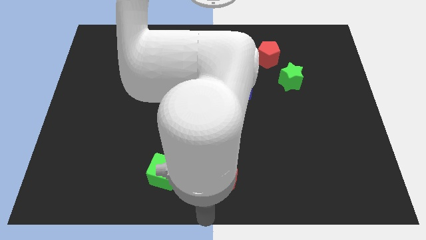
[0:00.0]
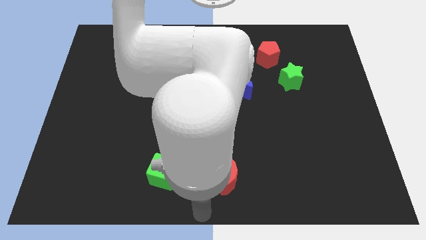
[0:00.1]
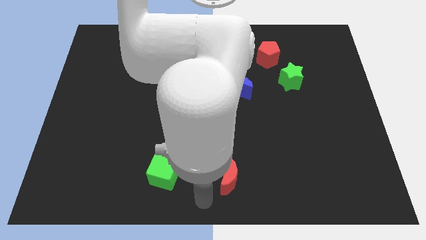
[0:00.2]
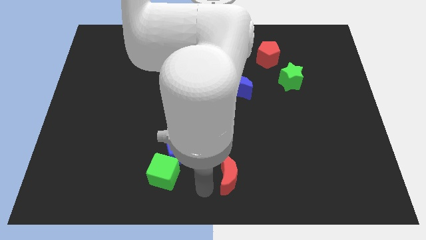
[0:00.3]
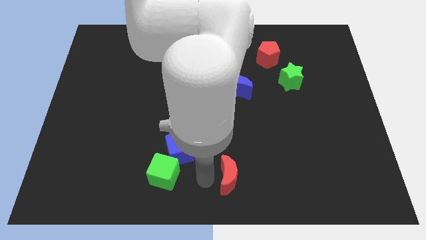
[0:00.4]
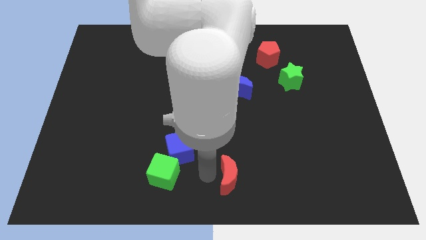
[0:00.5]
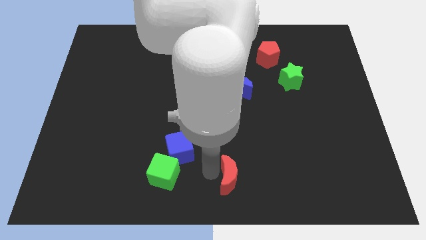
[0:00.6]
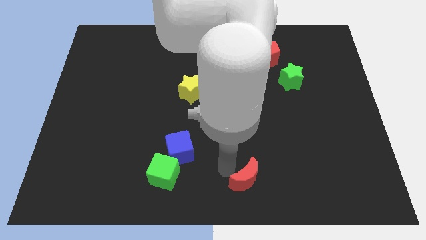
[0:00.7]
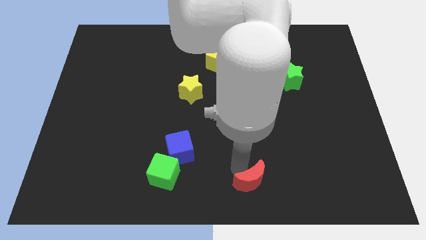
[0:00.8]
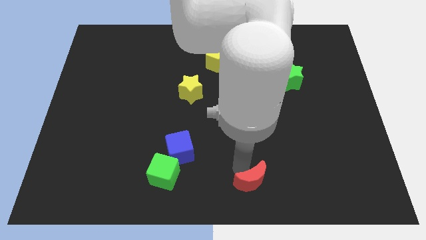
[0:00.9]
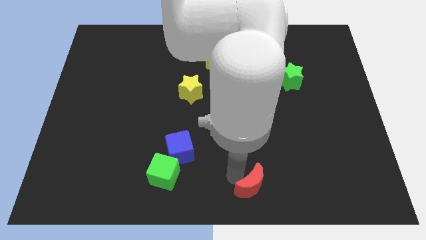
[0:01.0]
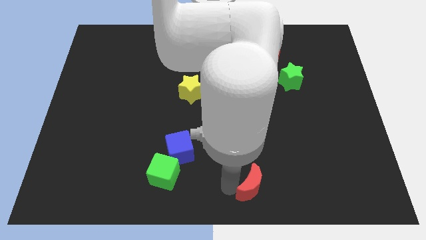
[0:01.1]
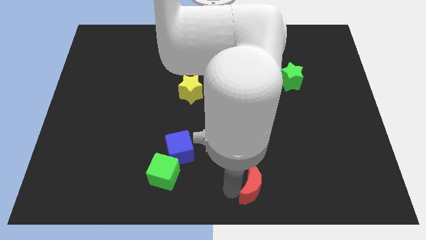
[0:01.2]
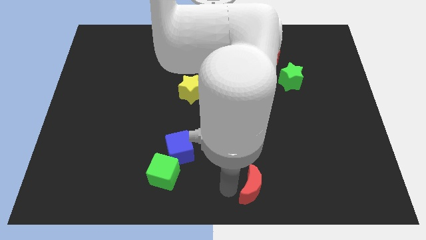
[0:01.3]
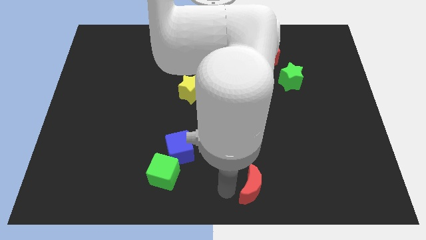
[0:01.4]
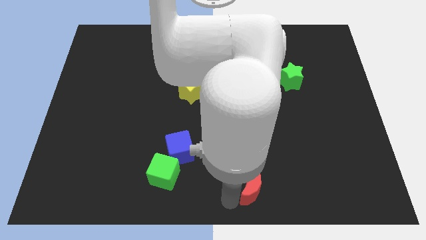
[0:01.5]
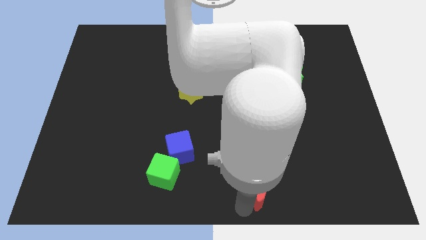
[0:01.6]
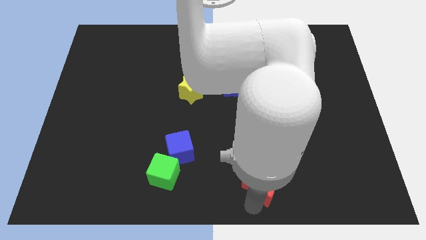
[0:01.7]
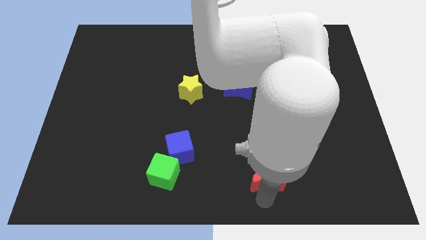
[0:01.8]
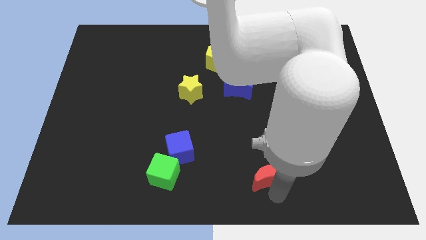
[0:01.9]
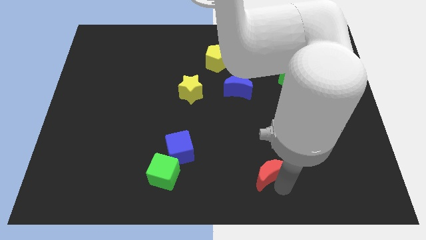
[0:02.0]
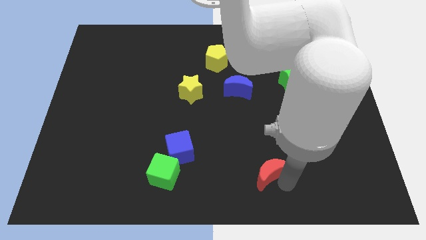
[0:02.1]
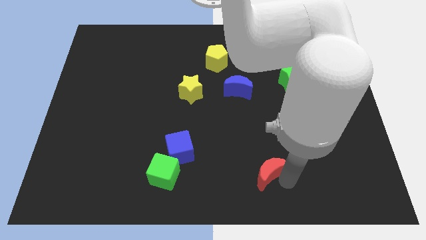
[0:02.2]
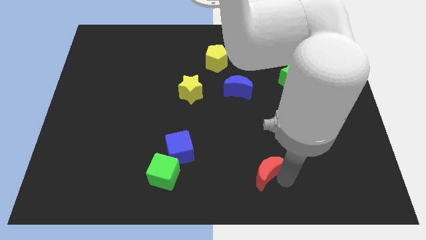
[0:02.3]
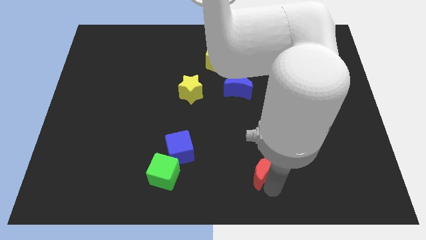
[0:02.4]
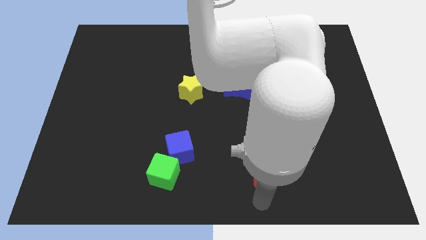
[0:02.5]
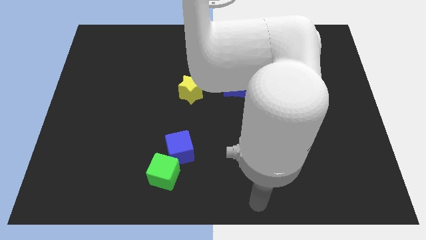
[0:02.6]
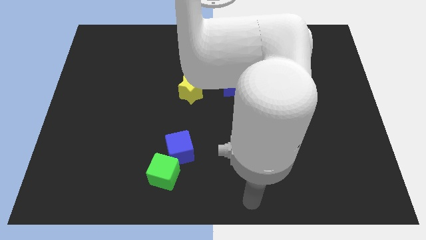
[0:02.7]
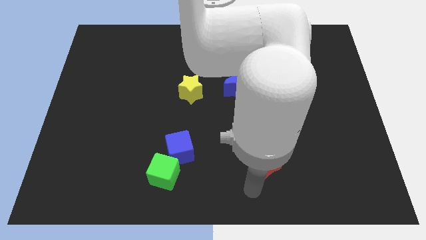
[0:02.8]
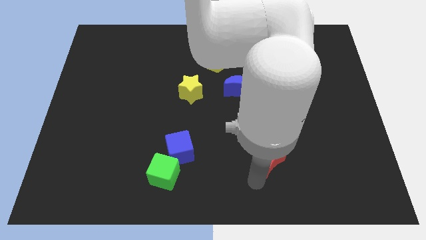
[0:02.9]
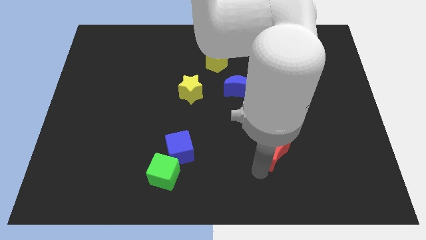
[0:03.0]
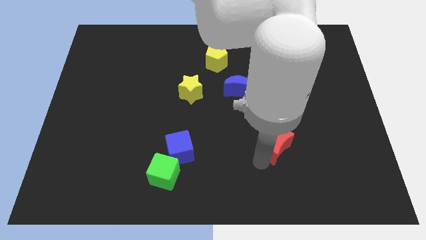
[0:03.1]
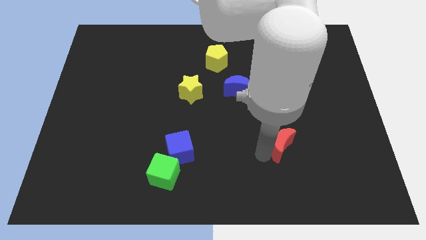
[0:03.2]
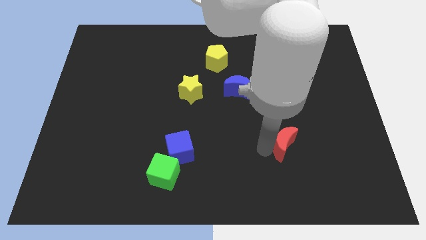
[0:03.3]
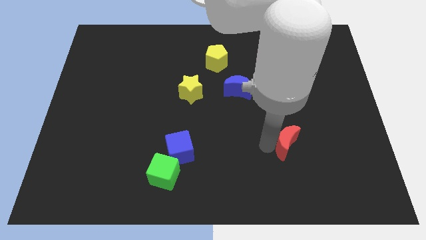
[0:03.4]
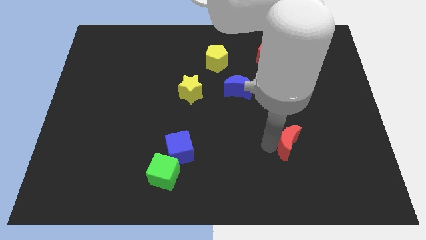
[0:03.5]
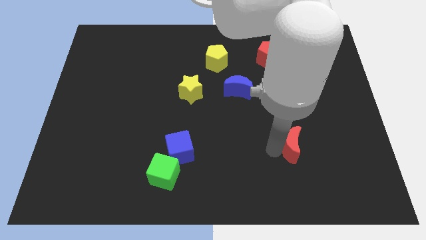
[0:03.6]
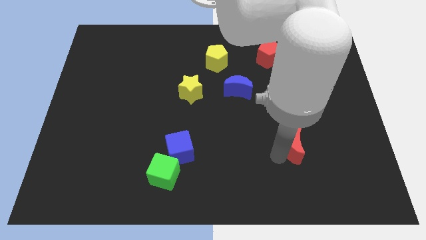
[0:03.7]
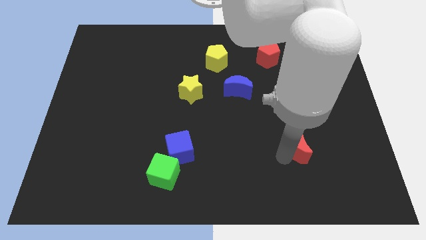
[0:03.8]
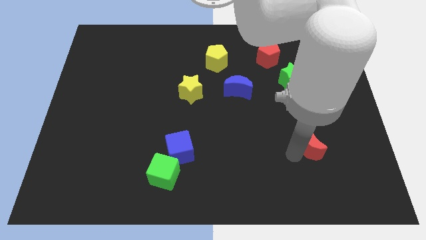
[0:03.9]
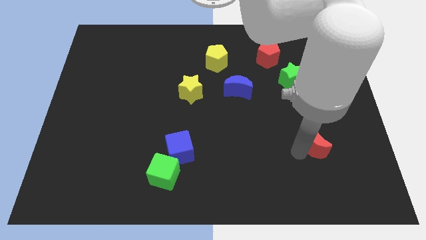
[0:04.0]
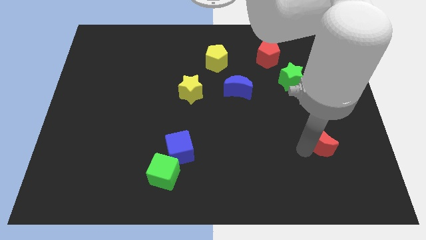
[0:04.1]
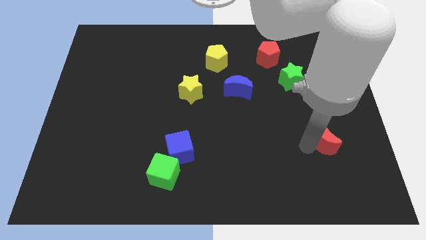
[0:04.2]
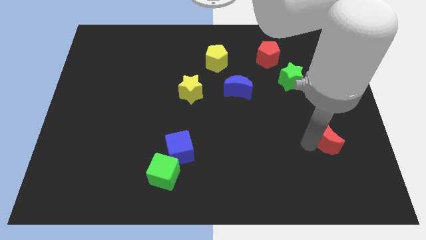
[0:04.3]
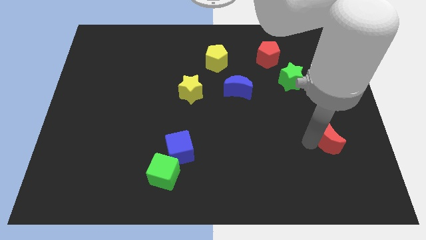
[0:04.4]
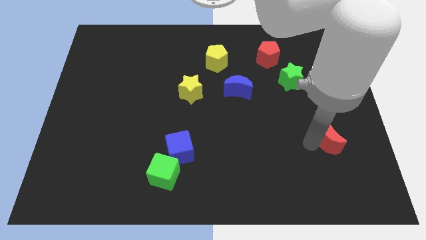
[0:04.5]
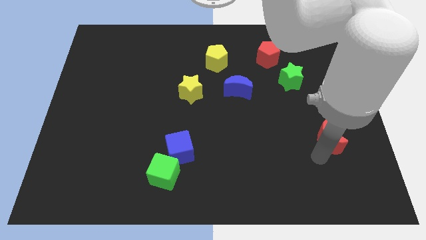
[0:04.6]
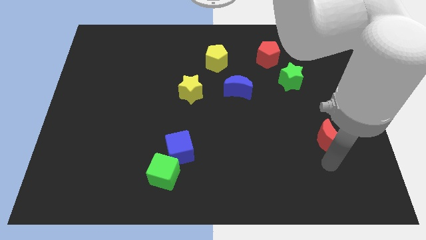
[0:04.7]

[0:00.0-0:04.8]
move the red crescent to the right of blue cube

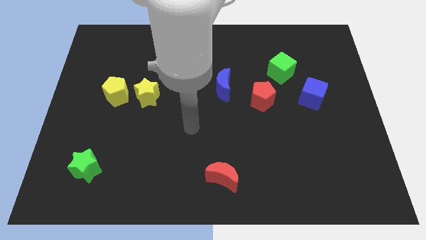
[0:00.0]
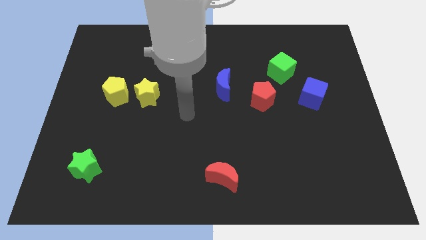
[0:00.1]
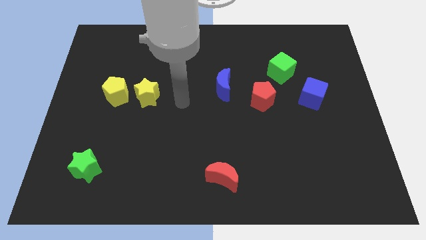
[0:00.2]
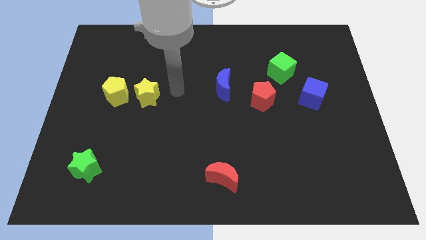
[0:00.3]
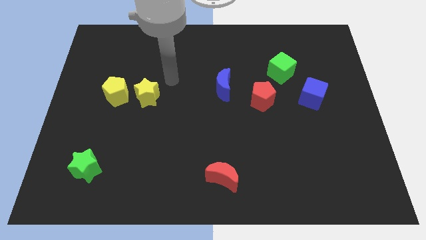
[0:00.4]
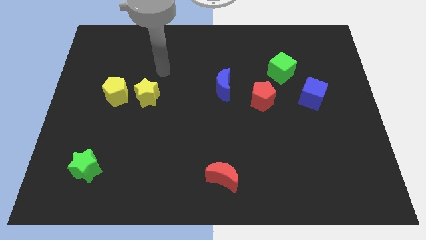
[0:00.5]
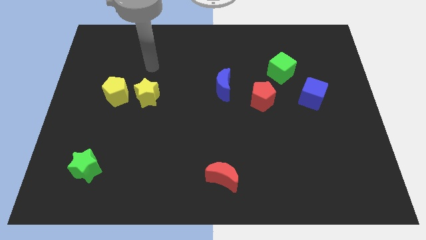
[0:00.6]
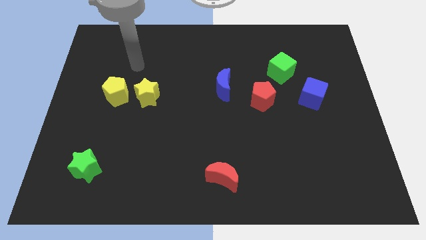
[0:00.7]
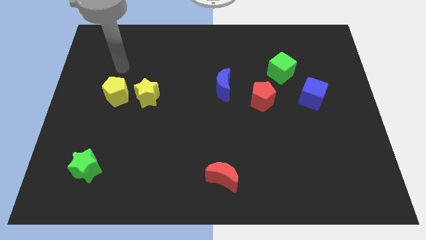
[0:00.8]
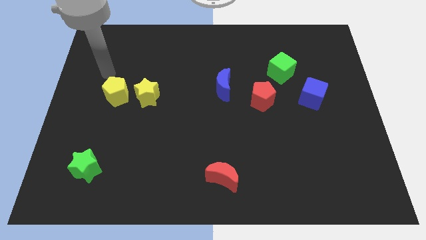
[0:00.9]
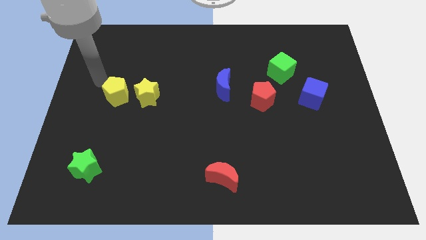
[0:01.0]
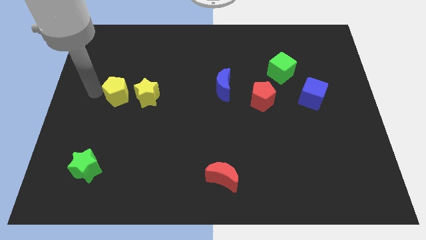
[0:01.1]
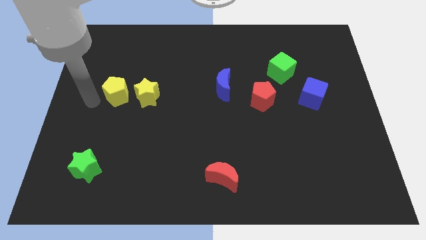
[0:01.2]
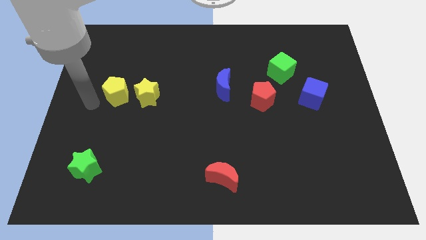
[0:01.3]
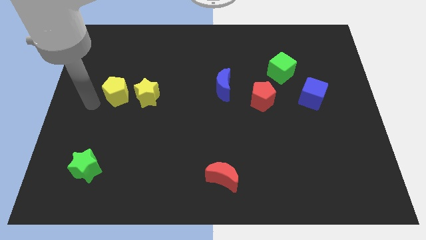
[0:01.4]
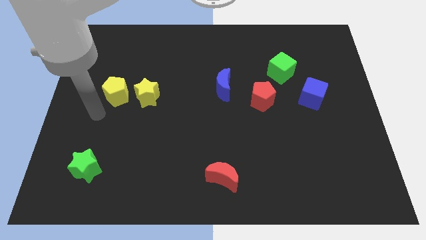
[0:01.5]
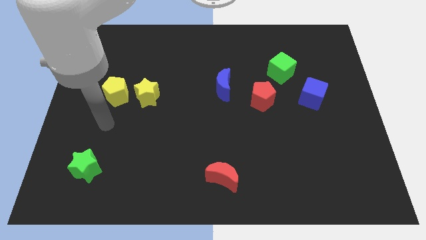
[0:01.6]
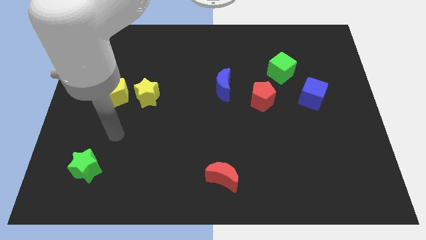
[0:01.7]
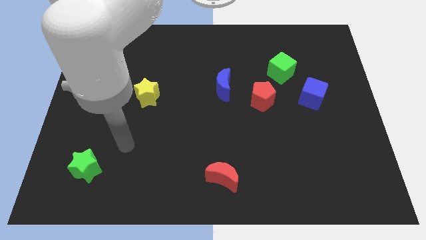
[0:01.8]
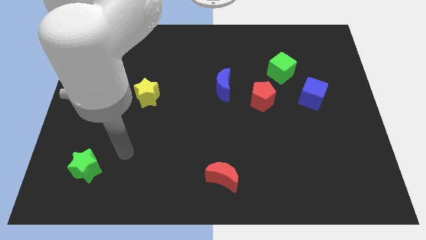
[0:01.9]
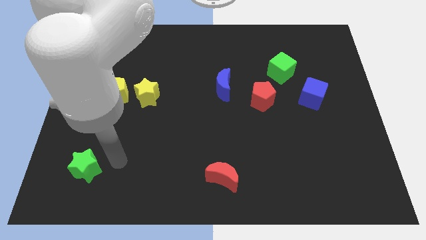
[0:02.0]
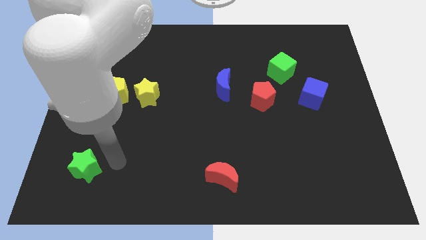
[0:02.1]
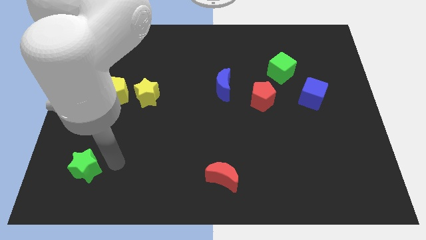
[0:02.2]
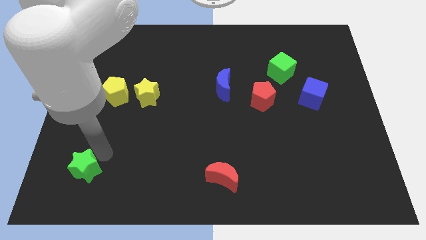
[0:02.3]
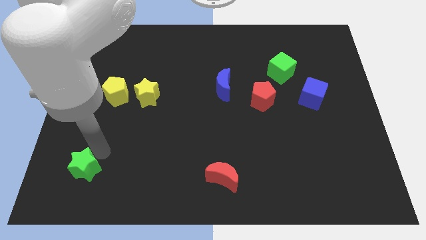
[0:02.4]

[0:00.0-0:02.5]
move your arm closer to the green star

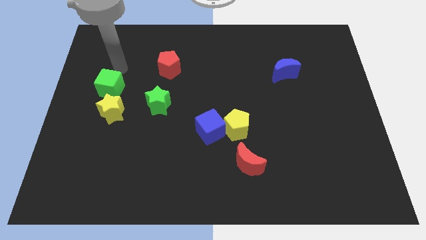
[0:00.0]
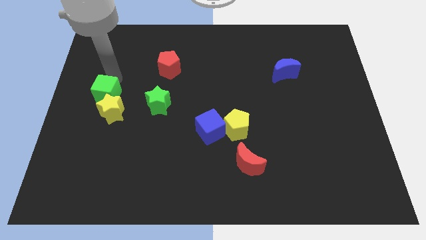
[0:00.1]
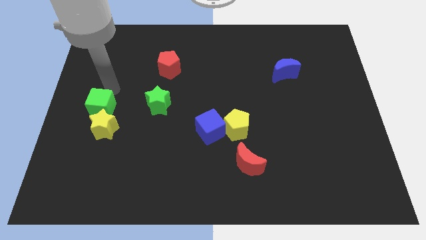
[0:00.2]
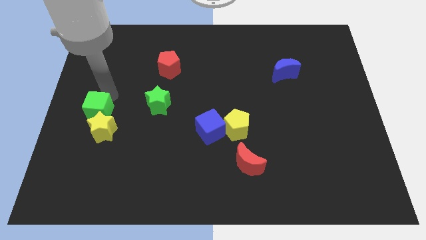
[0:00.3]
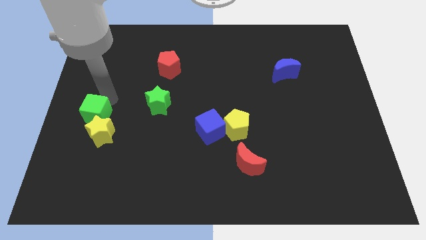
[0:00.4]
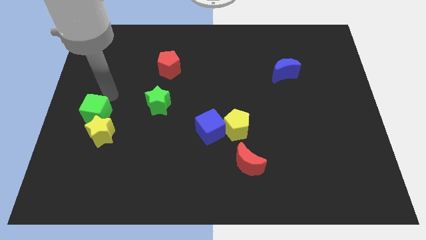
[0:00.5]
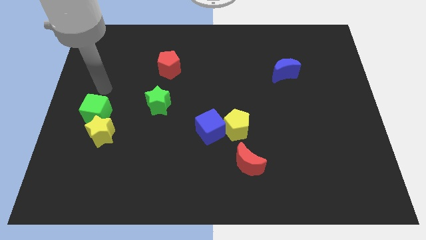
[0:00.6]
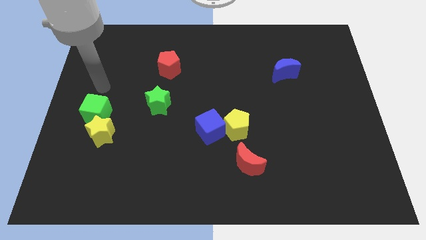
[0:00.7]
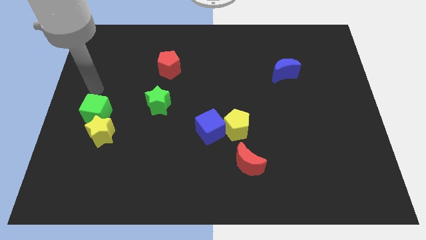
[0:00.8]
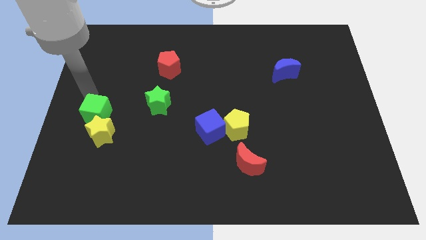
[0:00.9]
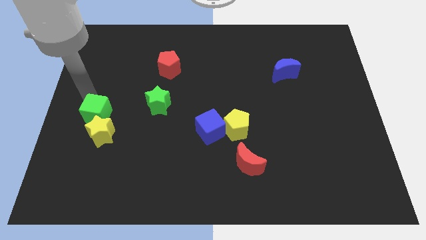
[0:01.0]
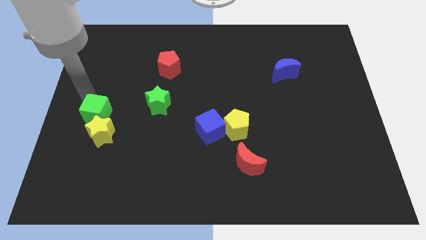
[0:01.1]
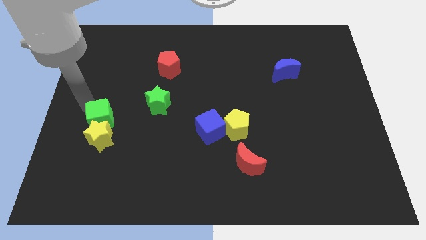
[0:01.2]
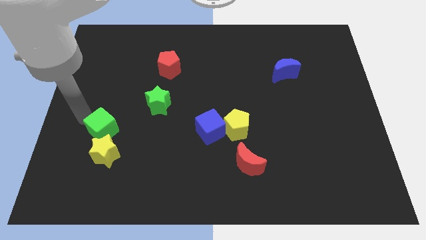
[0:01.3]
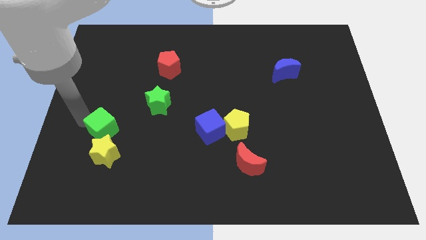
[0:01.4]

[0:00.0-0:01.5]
push the green cube slightly towards the bottom along with the yellow star
